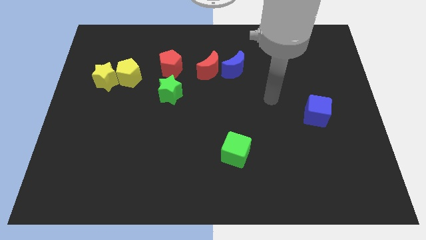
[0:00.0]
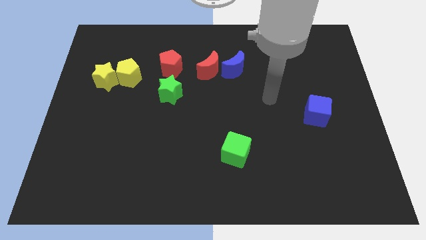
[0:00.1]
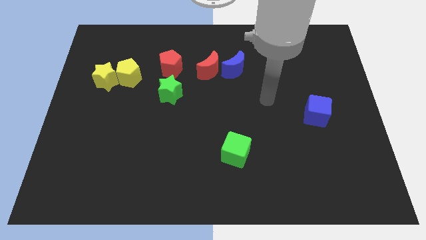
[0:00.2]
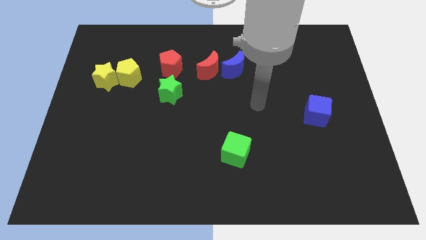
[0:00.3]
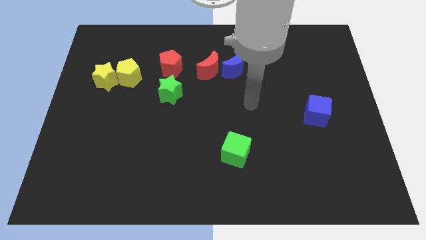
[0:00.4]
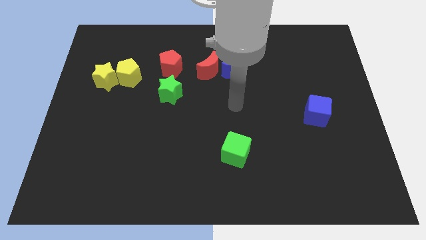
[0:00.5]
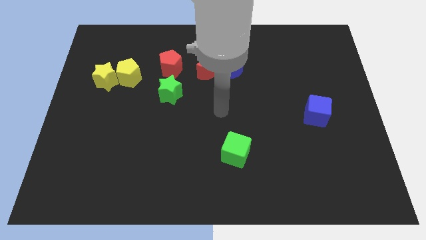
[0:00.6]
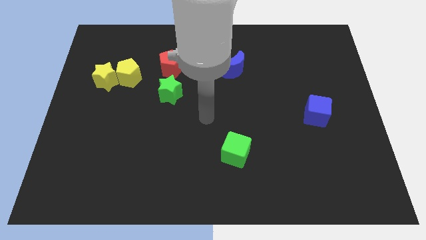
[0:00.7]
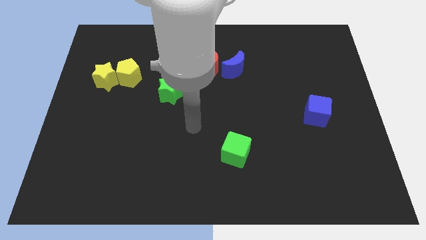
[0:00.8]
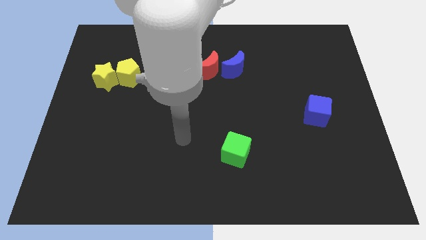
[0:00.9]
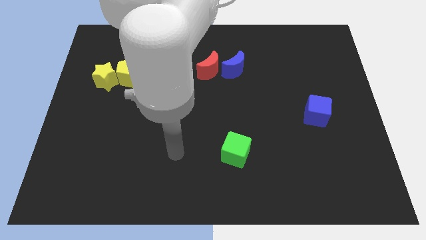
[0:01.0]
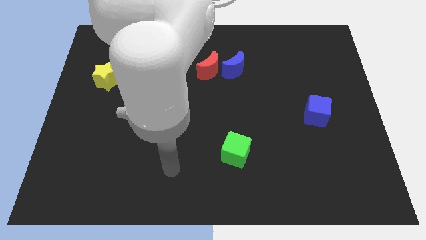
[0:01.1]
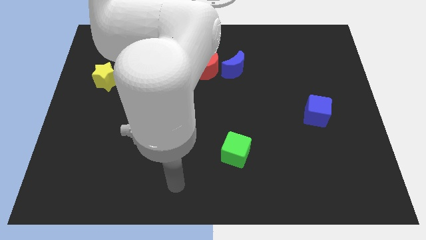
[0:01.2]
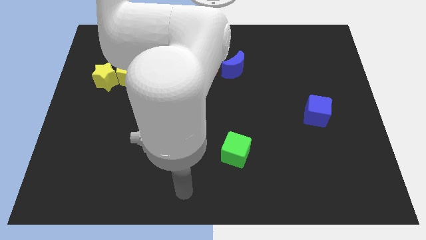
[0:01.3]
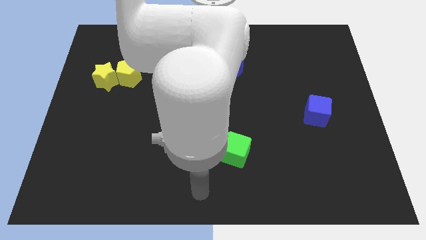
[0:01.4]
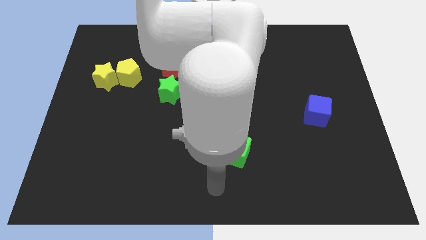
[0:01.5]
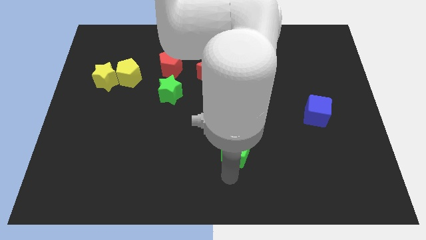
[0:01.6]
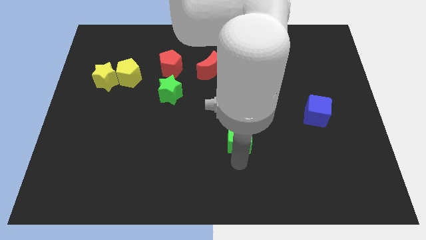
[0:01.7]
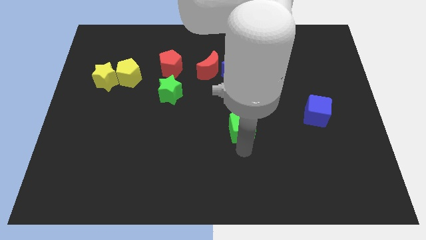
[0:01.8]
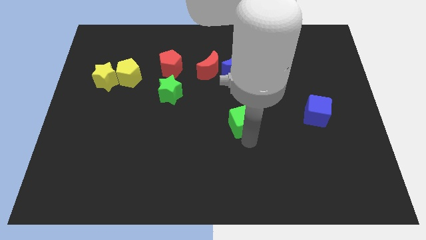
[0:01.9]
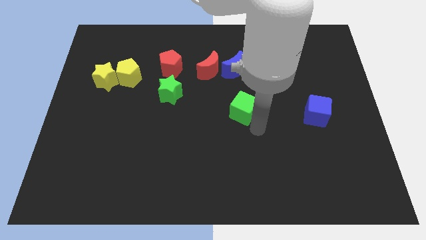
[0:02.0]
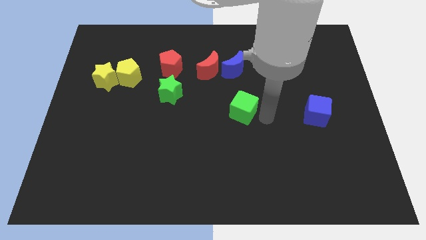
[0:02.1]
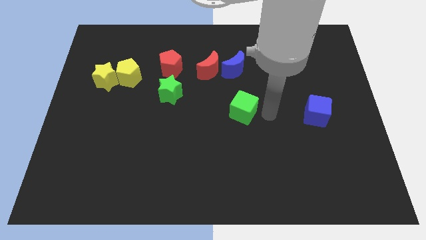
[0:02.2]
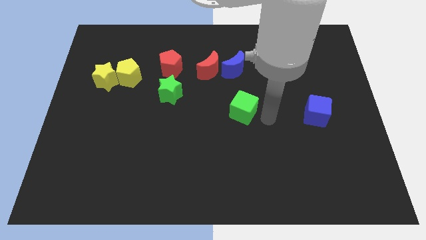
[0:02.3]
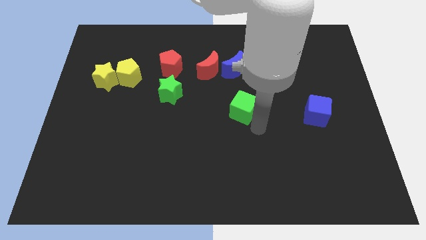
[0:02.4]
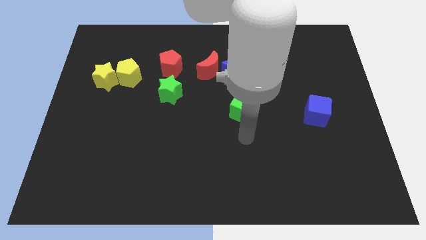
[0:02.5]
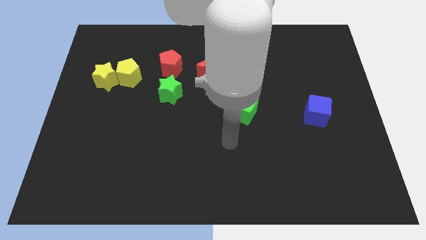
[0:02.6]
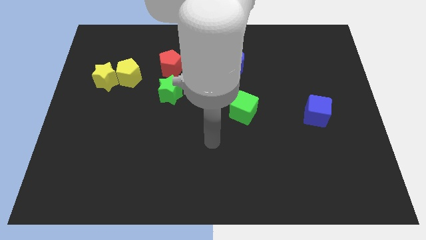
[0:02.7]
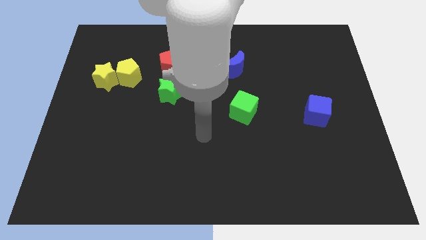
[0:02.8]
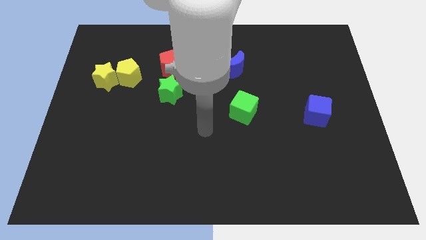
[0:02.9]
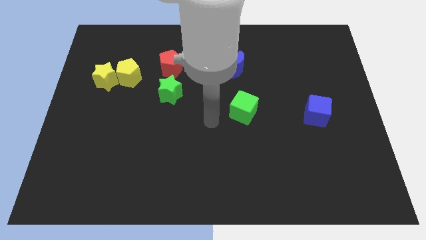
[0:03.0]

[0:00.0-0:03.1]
put the green cube horizontally to the left of the blue cube

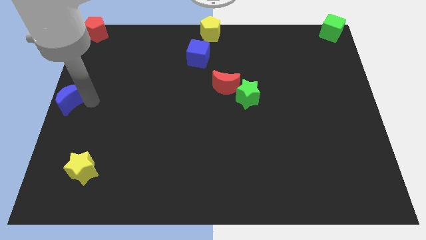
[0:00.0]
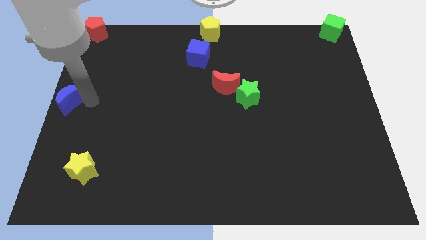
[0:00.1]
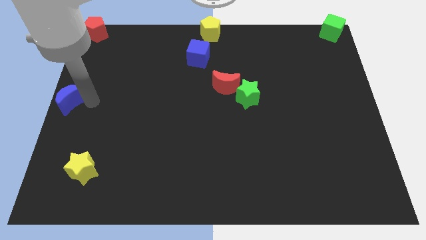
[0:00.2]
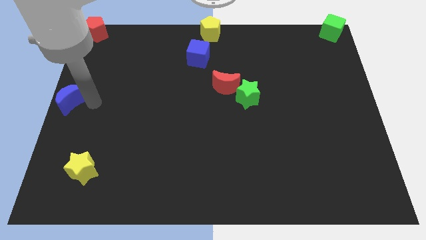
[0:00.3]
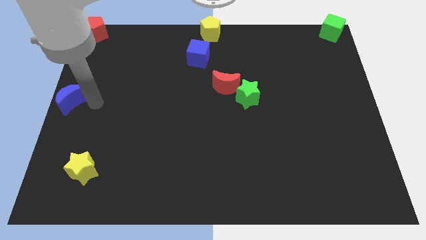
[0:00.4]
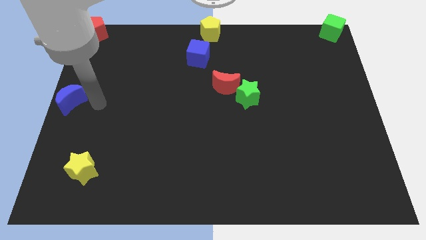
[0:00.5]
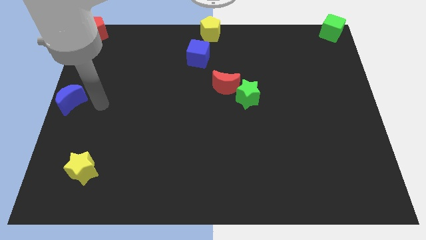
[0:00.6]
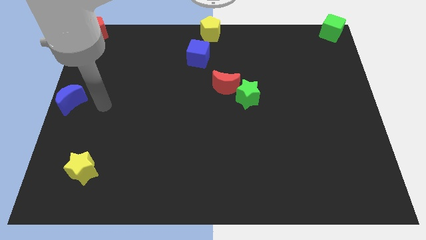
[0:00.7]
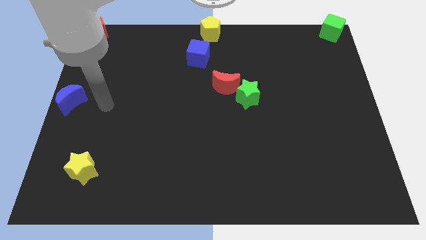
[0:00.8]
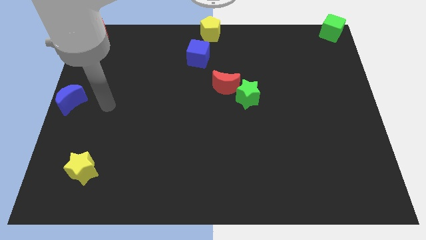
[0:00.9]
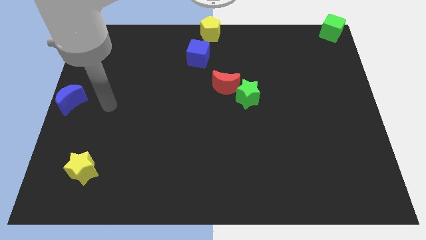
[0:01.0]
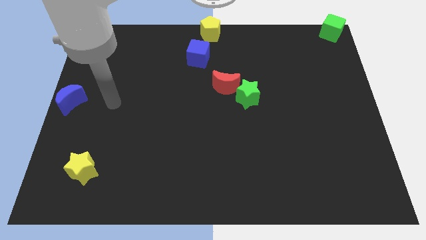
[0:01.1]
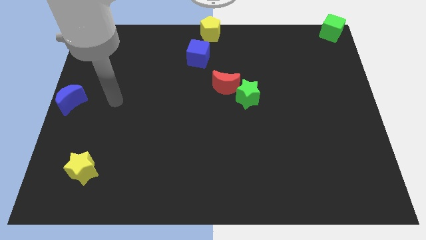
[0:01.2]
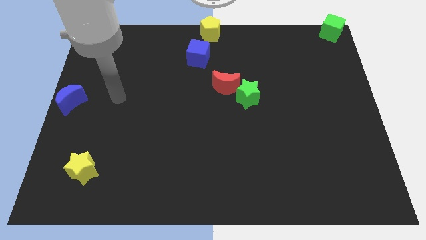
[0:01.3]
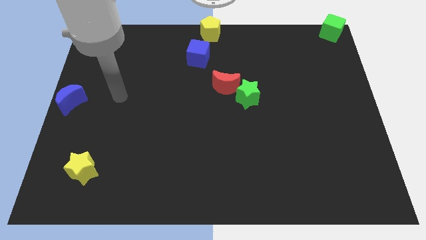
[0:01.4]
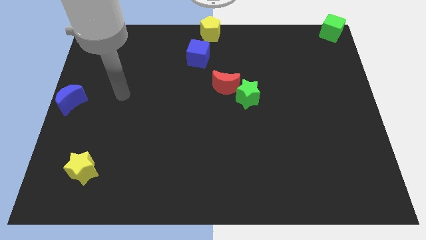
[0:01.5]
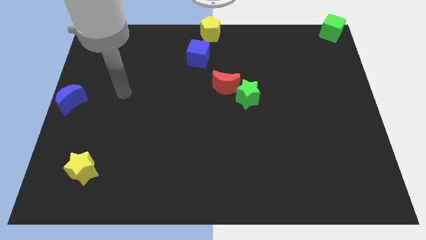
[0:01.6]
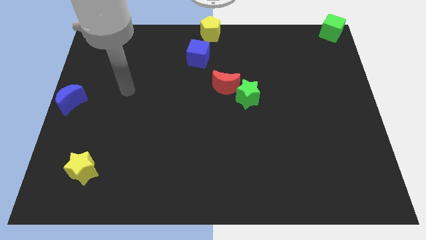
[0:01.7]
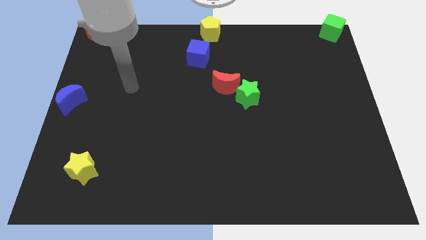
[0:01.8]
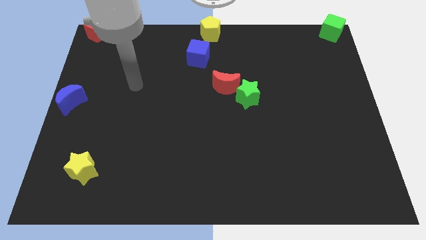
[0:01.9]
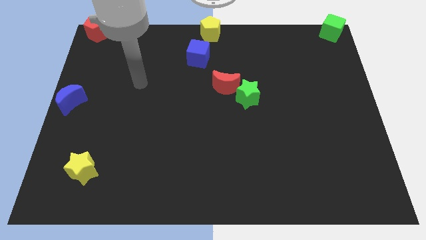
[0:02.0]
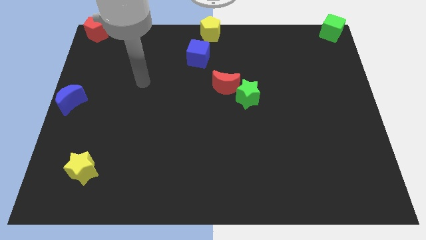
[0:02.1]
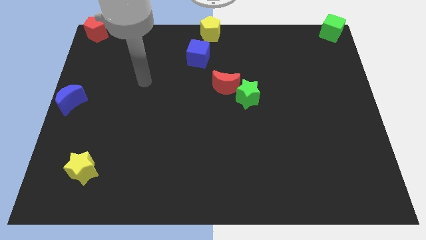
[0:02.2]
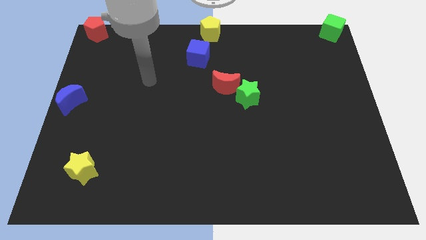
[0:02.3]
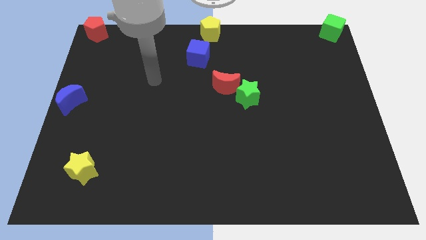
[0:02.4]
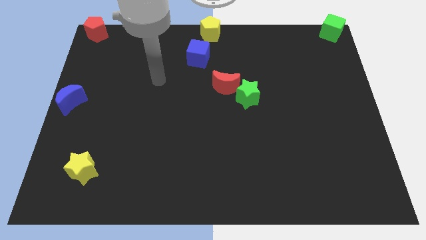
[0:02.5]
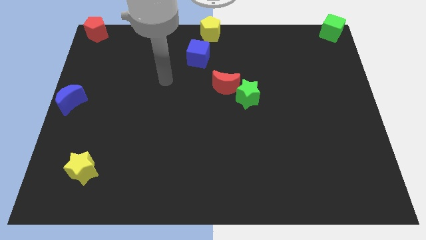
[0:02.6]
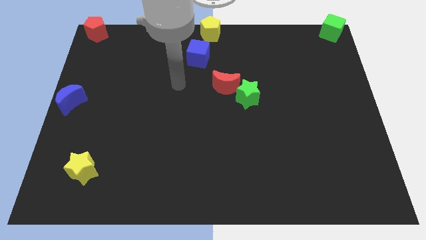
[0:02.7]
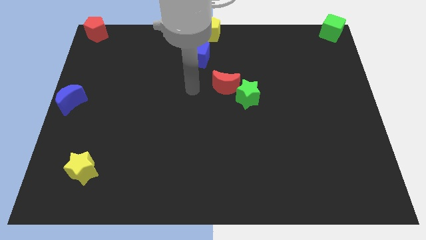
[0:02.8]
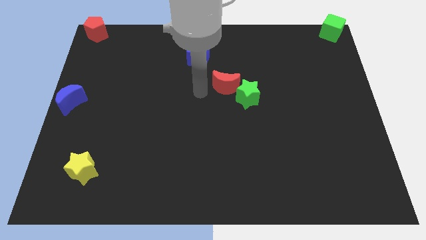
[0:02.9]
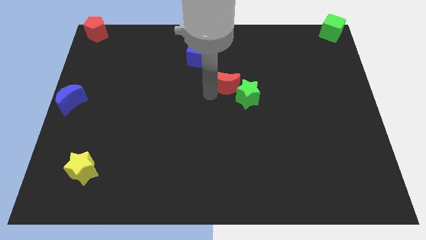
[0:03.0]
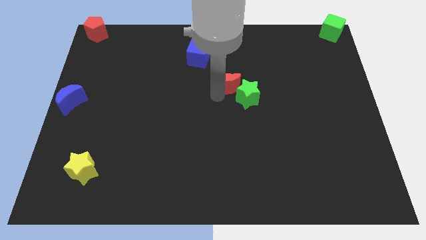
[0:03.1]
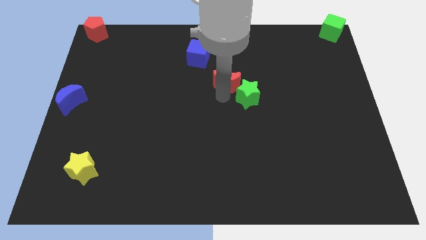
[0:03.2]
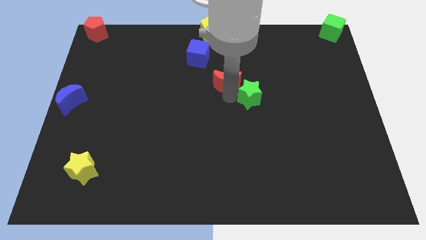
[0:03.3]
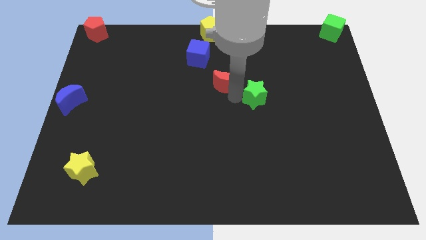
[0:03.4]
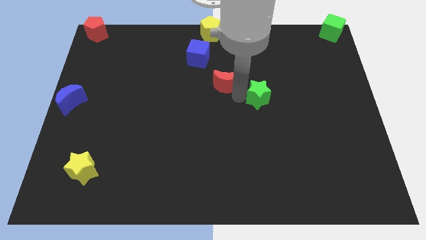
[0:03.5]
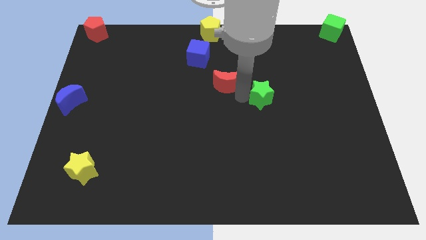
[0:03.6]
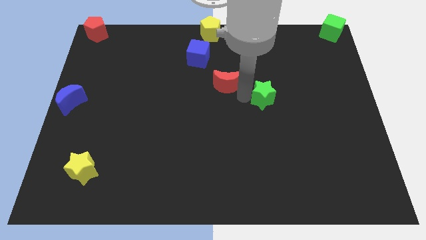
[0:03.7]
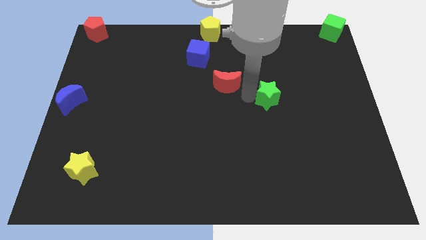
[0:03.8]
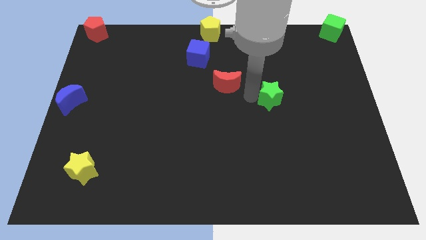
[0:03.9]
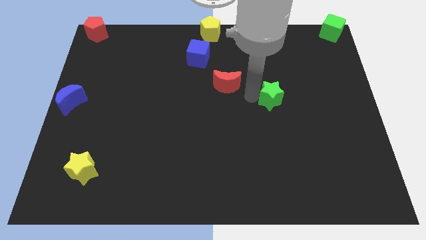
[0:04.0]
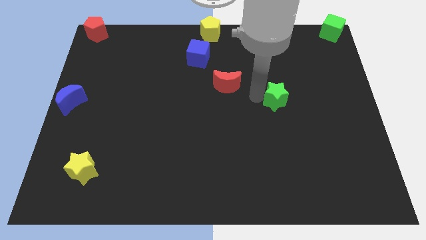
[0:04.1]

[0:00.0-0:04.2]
move your arm away from the blue moon

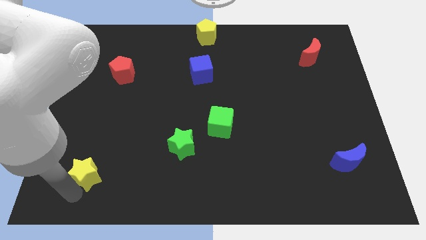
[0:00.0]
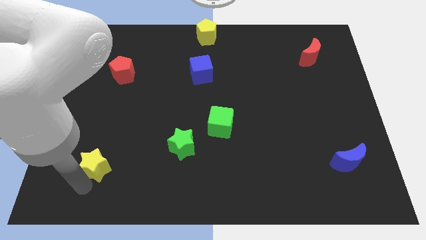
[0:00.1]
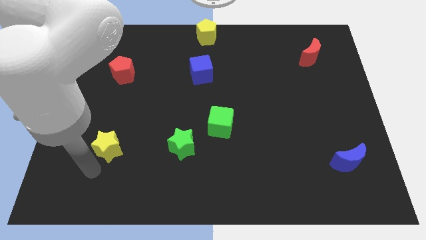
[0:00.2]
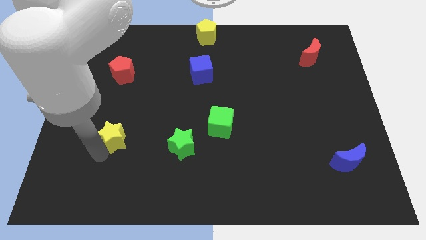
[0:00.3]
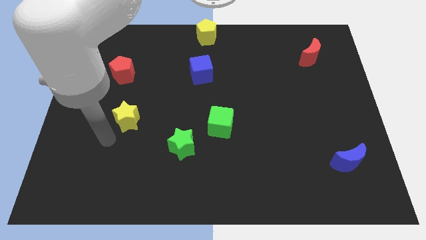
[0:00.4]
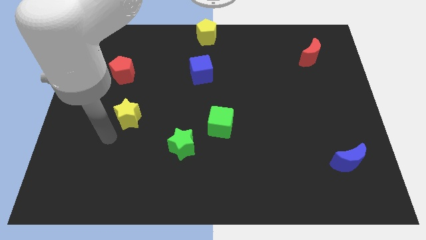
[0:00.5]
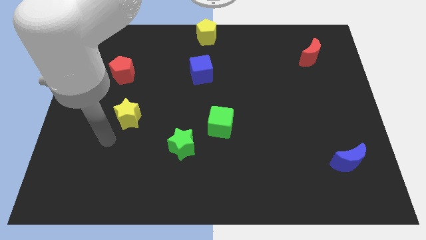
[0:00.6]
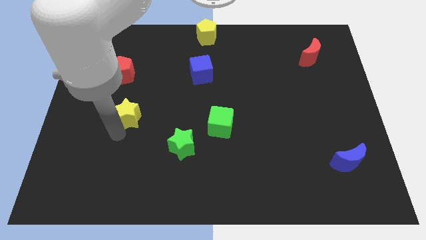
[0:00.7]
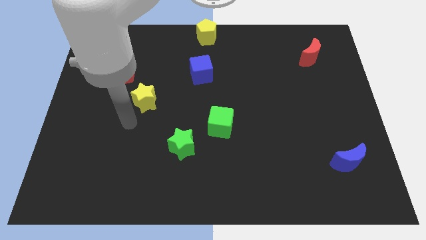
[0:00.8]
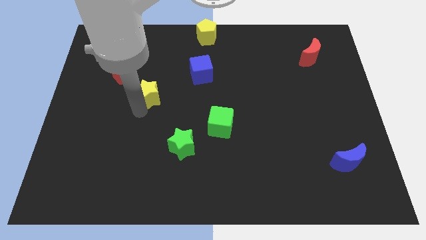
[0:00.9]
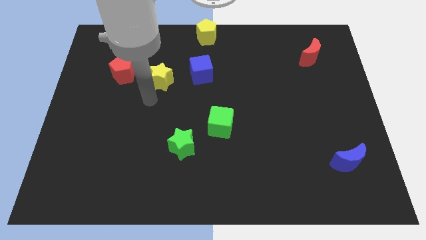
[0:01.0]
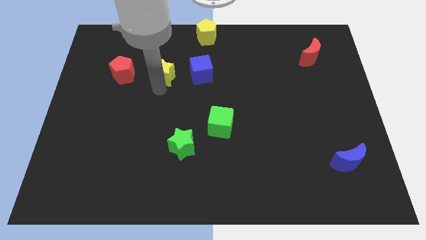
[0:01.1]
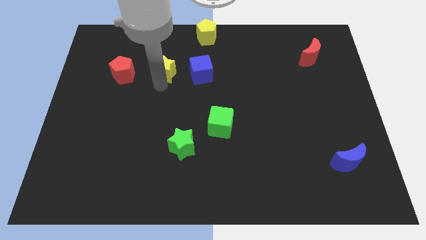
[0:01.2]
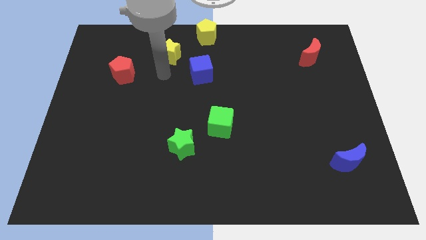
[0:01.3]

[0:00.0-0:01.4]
place yellow star to the right of the red pentagon

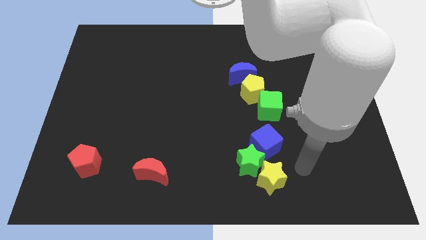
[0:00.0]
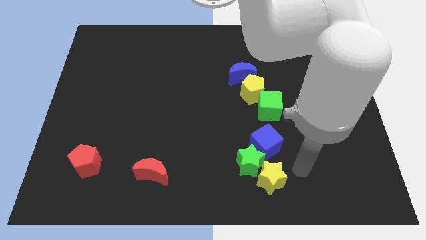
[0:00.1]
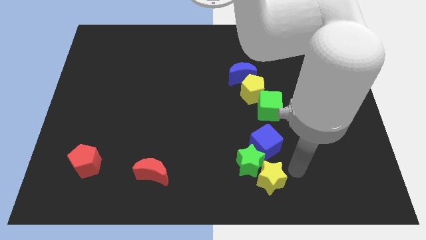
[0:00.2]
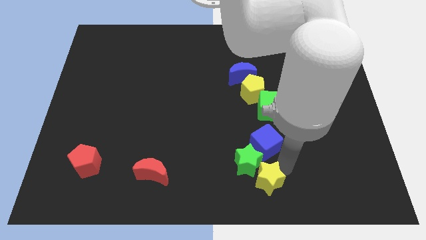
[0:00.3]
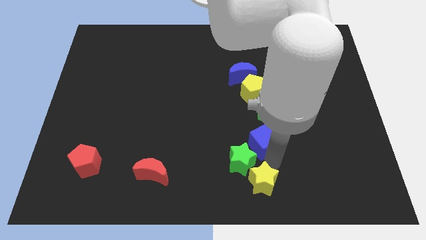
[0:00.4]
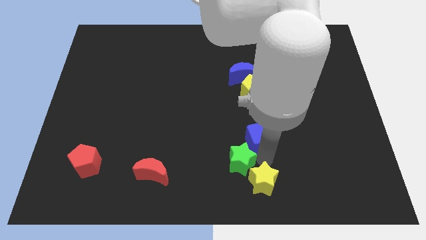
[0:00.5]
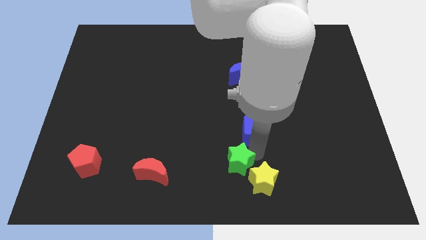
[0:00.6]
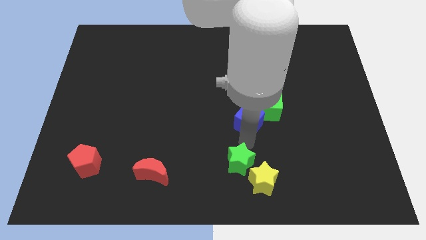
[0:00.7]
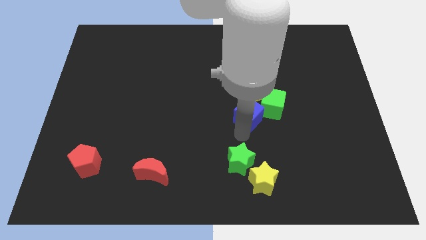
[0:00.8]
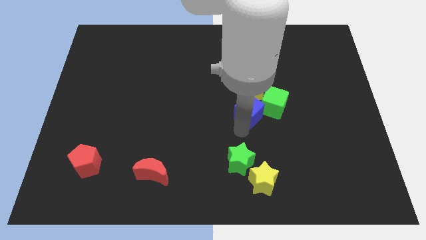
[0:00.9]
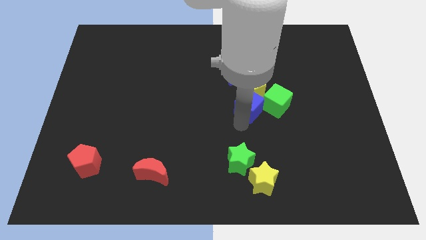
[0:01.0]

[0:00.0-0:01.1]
move the blue cube into the green cube
